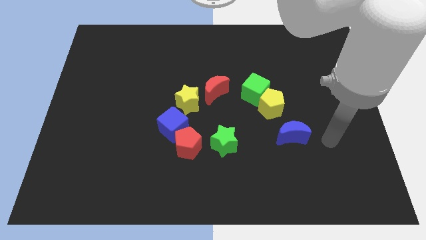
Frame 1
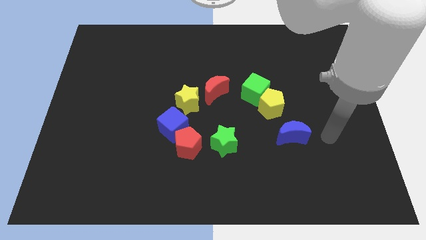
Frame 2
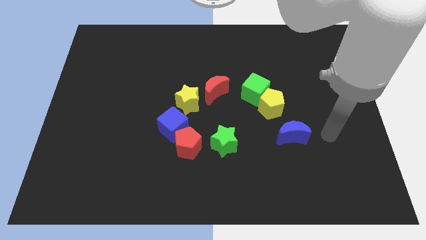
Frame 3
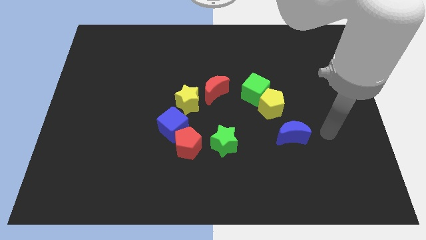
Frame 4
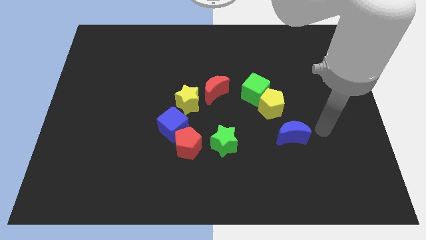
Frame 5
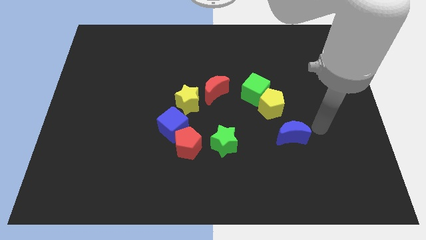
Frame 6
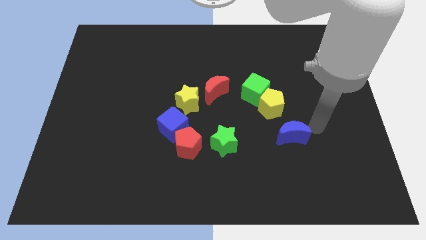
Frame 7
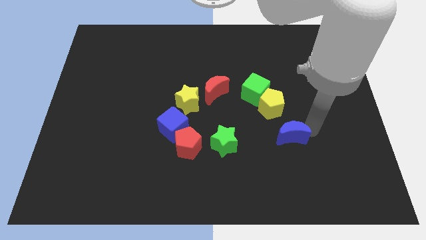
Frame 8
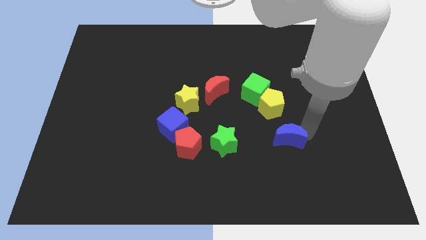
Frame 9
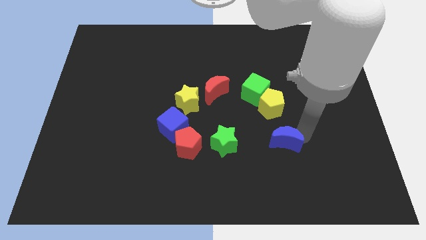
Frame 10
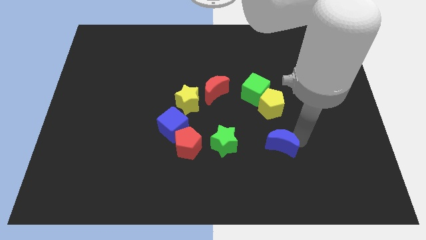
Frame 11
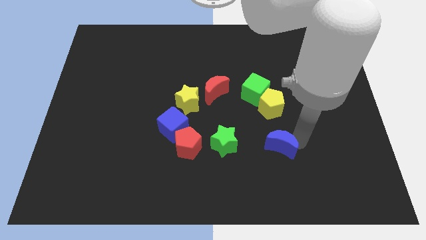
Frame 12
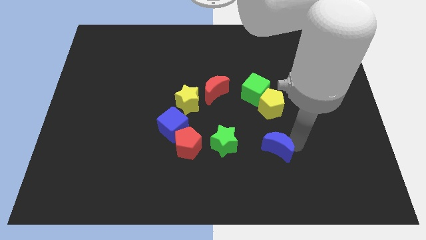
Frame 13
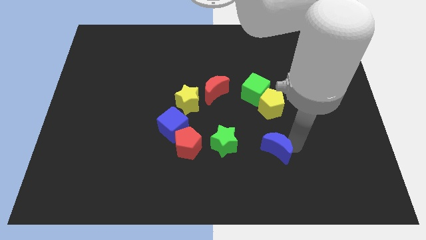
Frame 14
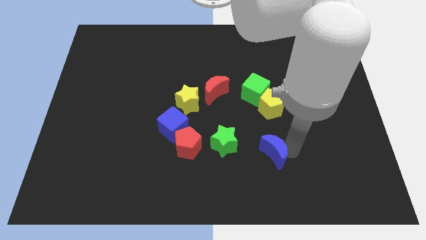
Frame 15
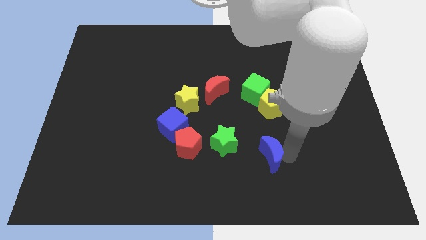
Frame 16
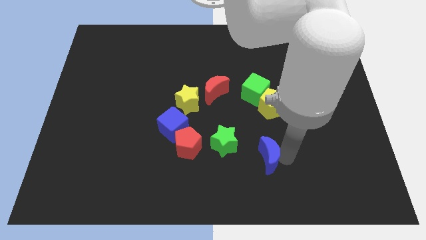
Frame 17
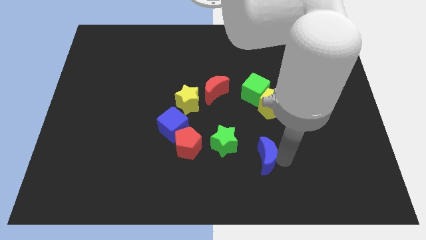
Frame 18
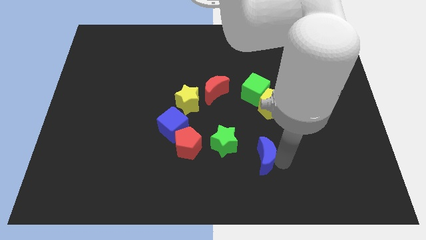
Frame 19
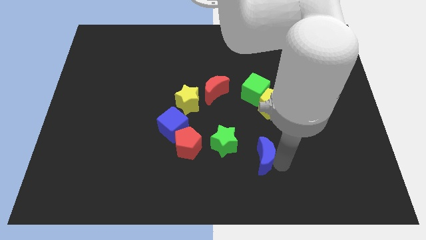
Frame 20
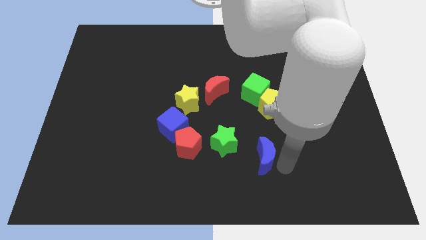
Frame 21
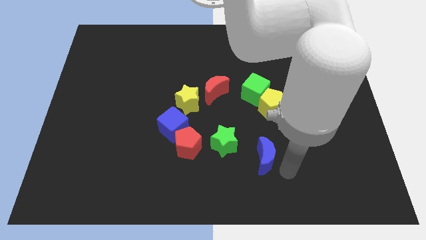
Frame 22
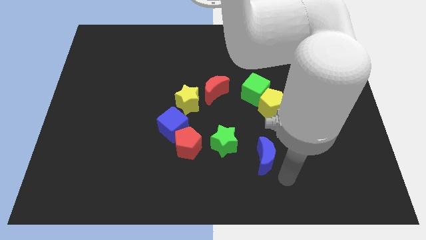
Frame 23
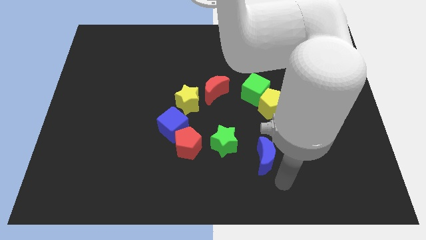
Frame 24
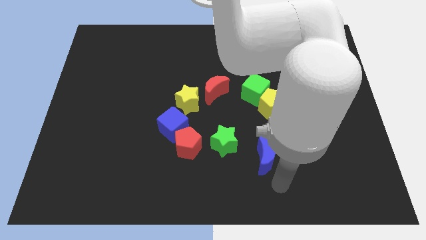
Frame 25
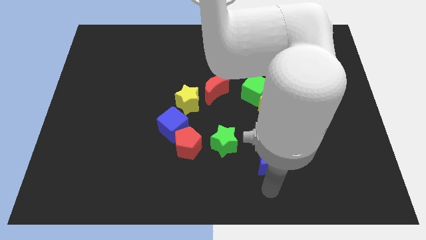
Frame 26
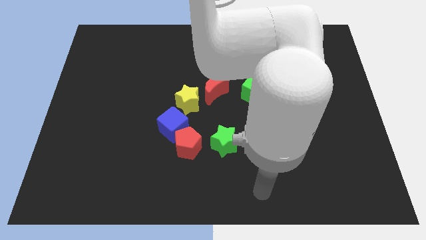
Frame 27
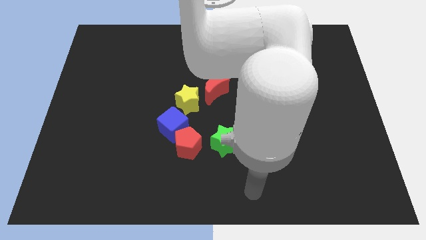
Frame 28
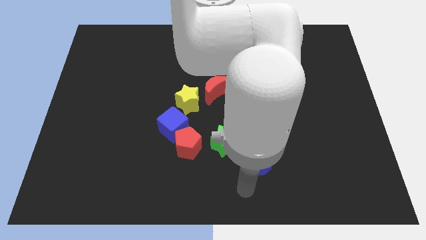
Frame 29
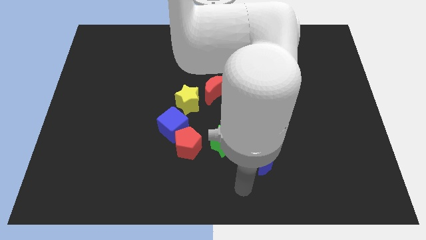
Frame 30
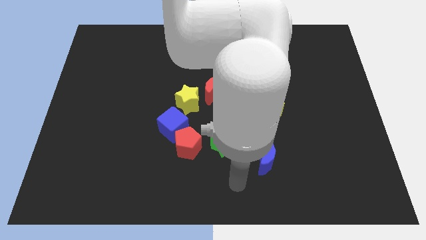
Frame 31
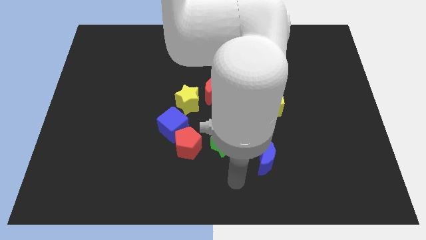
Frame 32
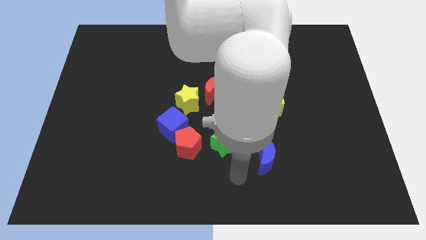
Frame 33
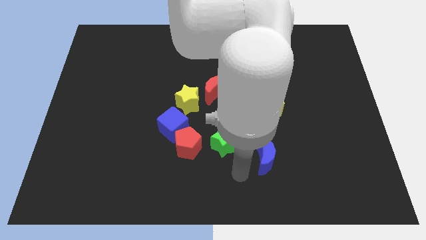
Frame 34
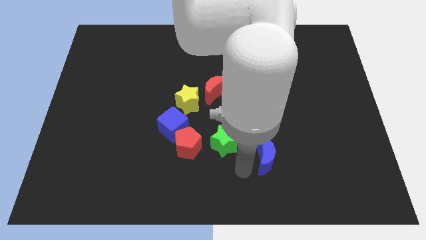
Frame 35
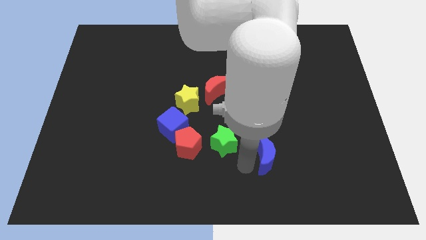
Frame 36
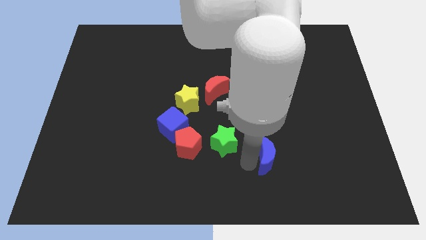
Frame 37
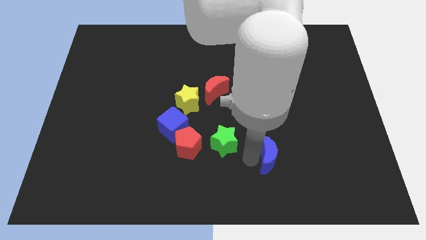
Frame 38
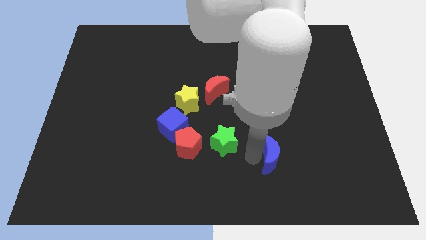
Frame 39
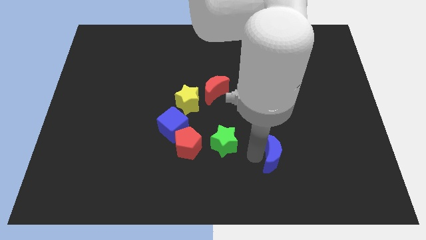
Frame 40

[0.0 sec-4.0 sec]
push the blue moon slightly towards the green star

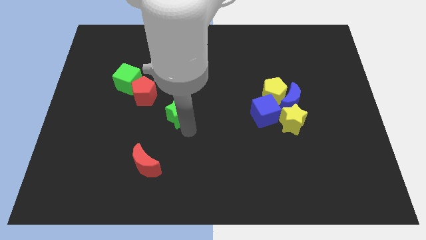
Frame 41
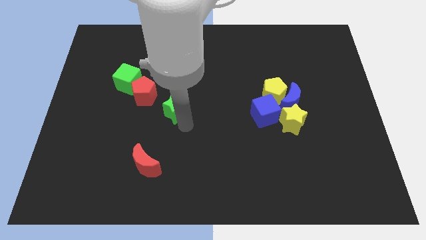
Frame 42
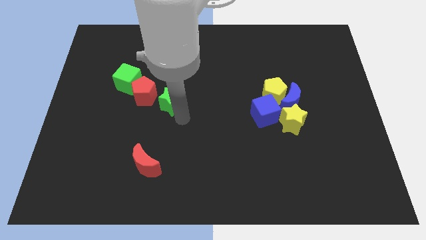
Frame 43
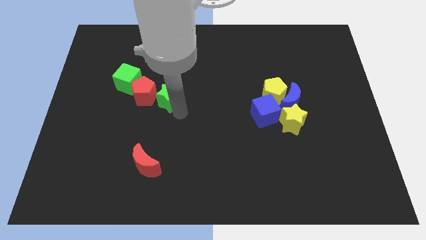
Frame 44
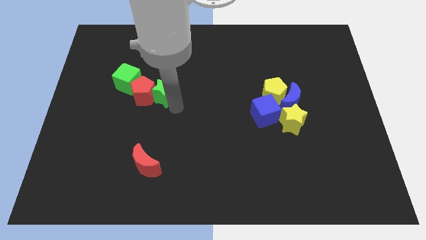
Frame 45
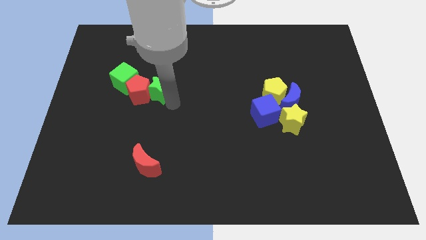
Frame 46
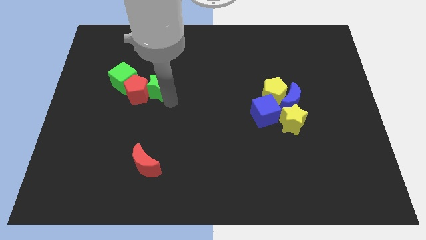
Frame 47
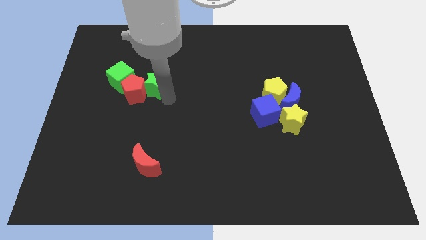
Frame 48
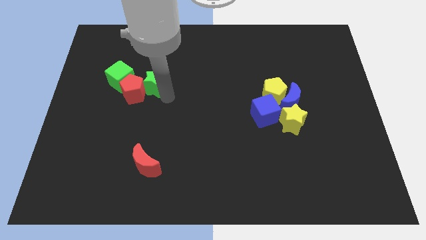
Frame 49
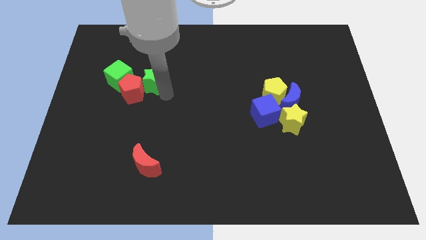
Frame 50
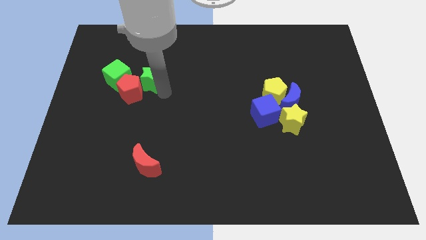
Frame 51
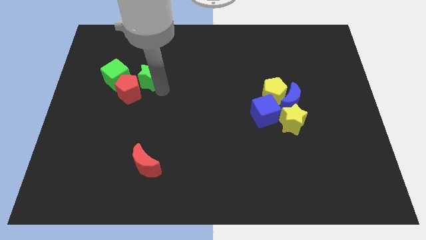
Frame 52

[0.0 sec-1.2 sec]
push the green blocks and red pentagon towards the left side of the board

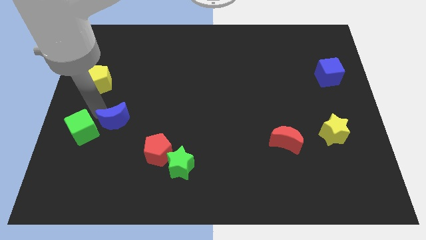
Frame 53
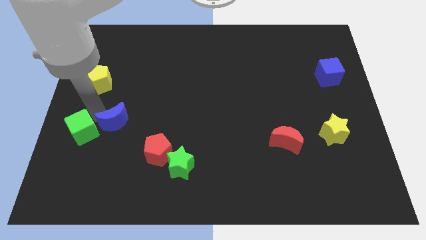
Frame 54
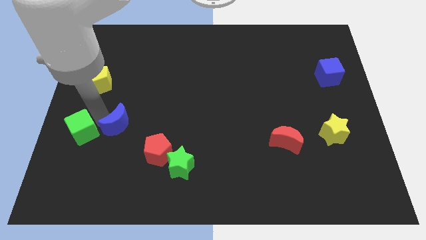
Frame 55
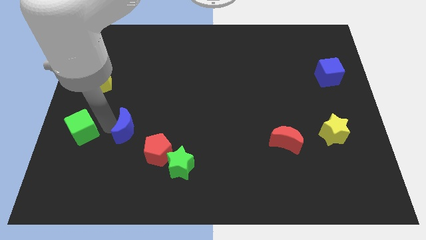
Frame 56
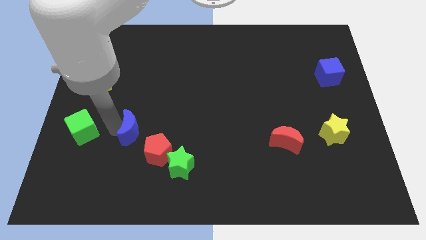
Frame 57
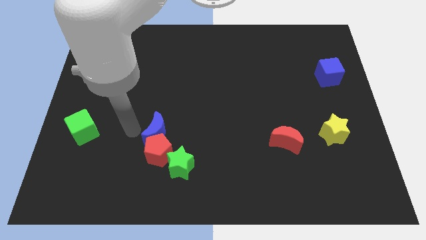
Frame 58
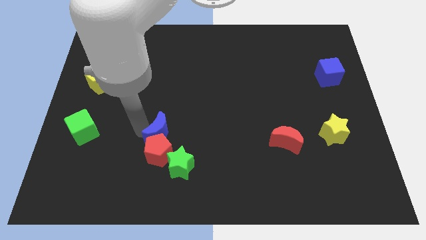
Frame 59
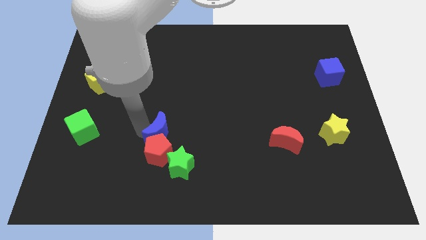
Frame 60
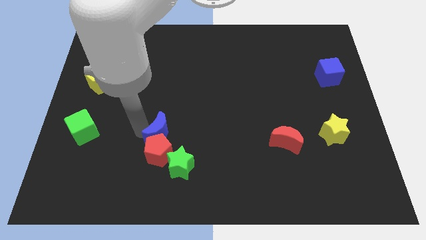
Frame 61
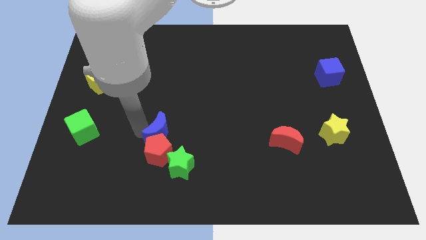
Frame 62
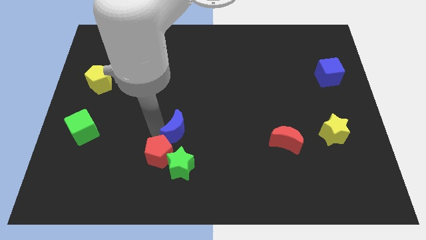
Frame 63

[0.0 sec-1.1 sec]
push the blue crescent above the red pentagon

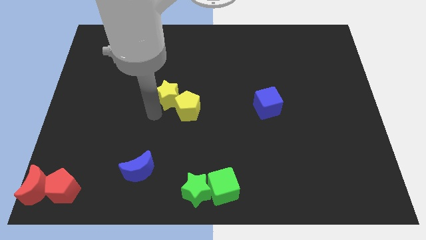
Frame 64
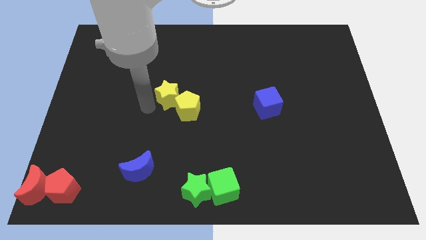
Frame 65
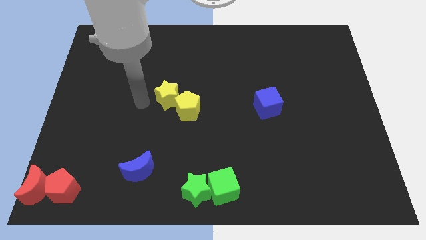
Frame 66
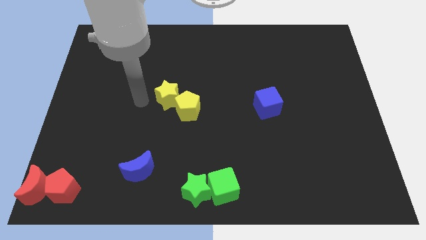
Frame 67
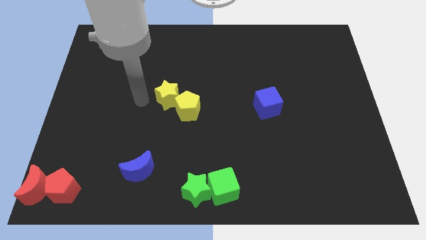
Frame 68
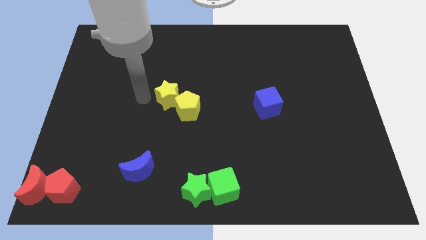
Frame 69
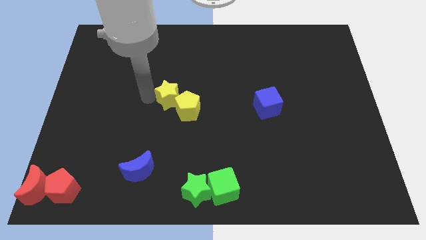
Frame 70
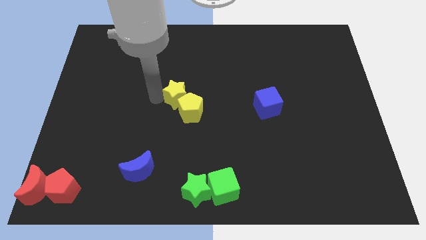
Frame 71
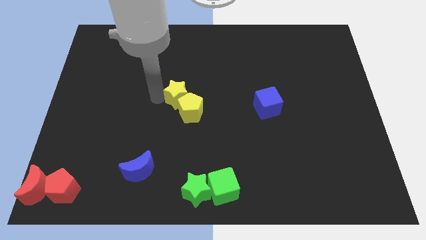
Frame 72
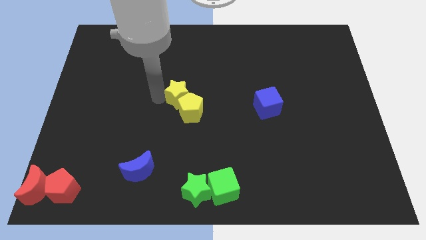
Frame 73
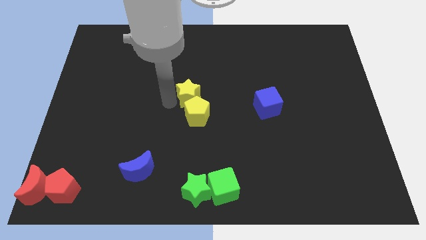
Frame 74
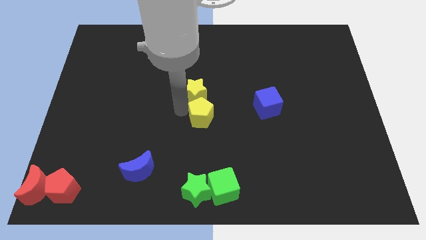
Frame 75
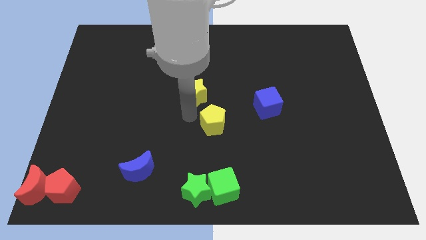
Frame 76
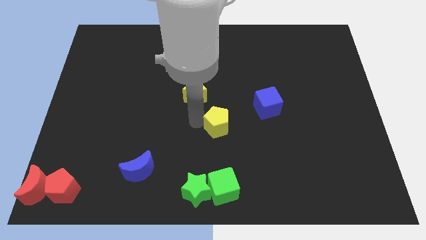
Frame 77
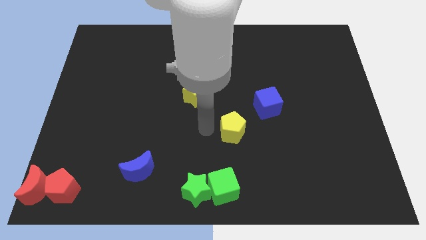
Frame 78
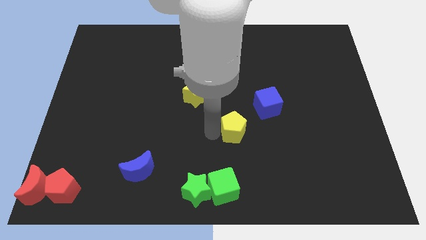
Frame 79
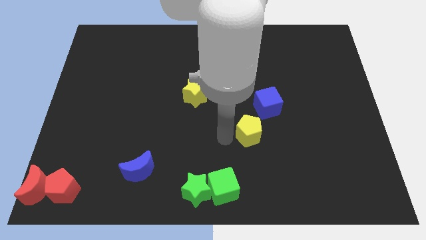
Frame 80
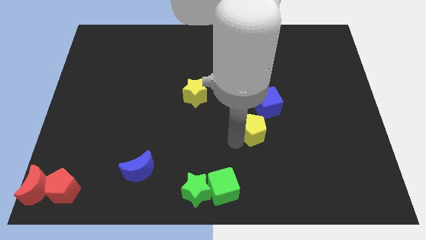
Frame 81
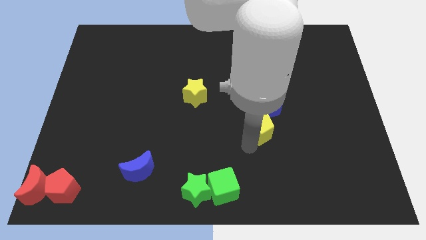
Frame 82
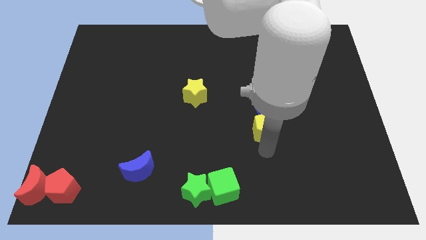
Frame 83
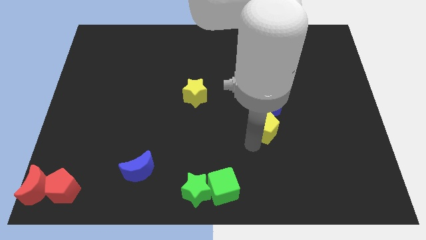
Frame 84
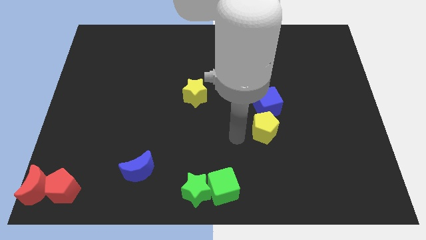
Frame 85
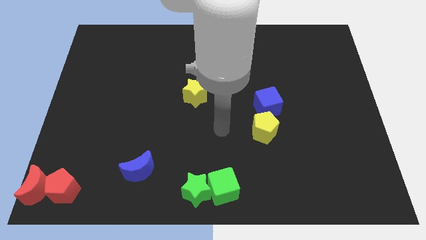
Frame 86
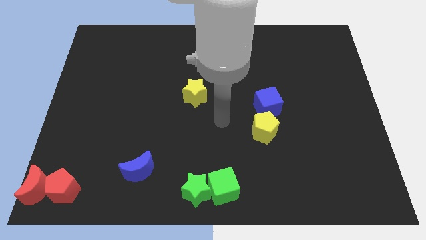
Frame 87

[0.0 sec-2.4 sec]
separate yellow pentagon away from the yellow star

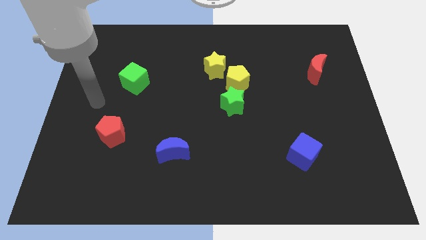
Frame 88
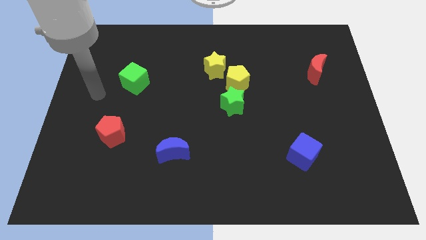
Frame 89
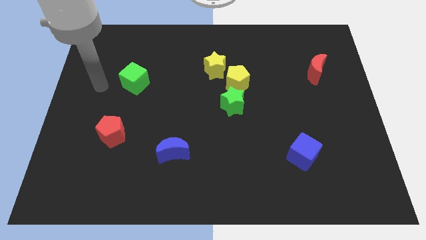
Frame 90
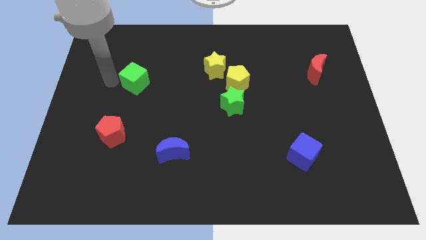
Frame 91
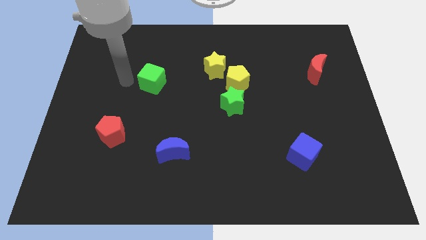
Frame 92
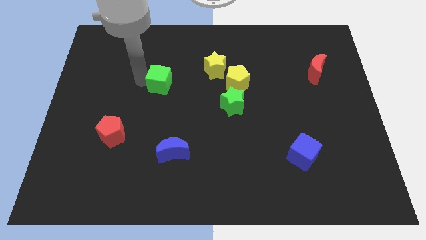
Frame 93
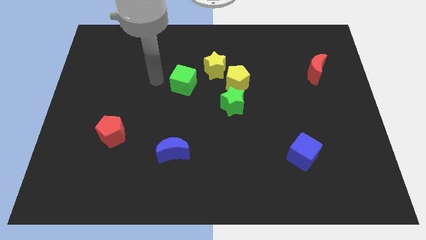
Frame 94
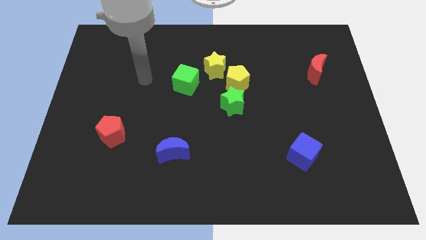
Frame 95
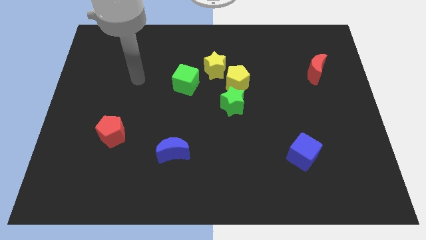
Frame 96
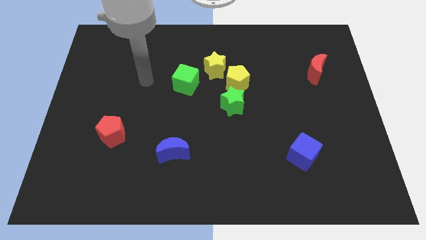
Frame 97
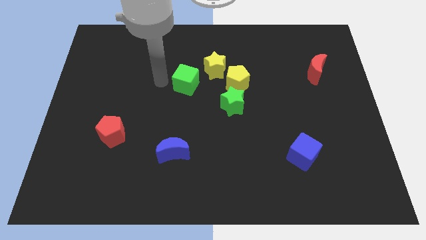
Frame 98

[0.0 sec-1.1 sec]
push green cube parallel to yellow pentagon
